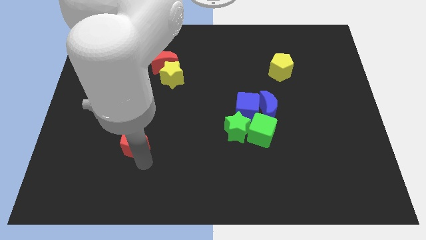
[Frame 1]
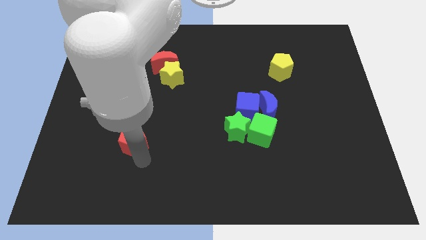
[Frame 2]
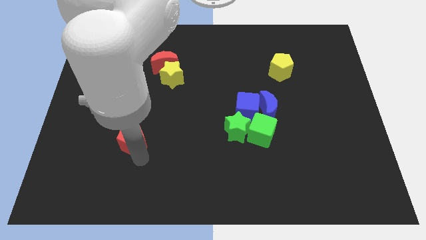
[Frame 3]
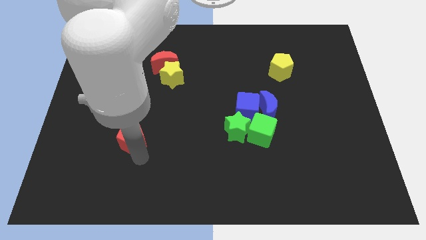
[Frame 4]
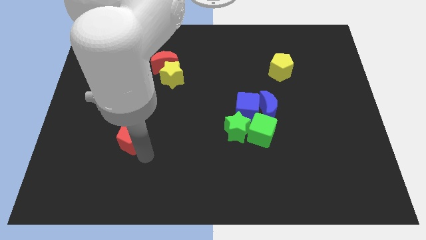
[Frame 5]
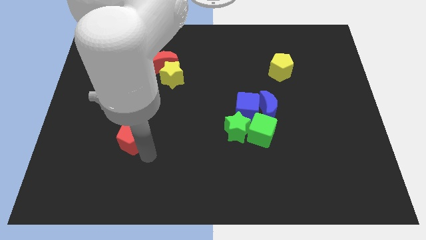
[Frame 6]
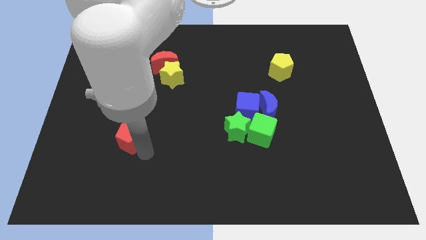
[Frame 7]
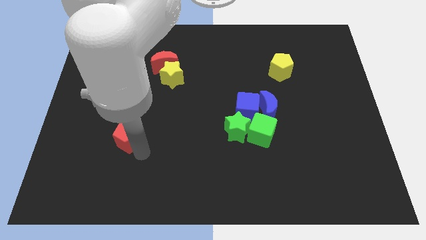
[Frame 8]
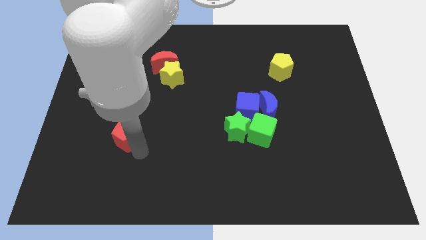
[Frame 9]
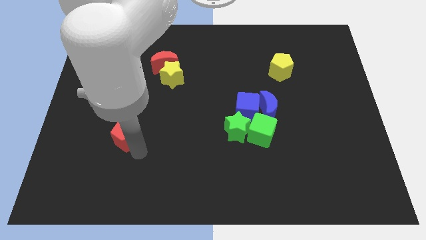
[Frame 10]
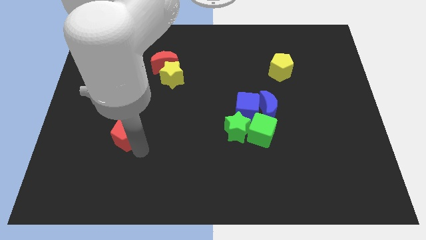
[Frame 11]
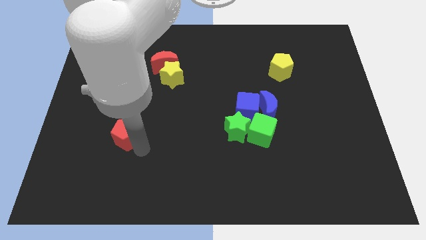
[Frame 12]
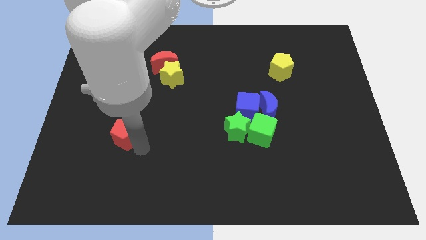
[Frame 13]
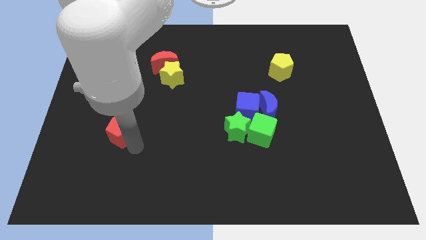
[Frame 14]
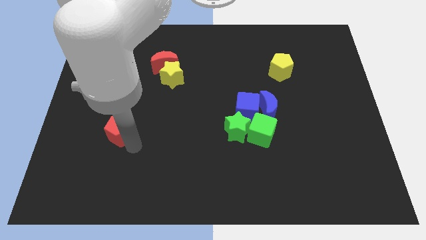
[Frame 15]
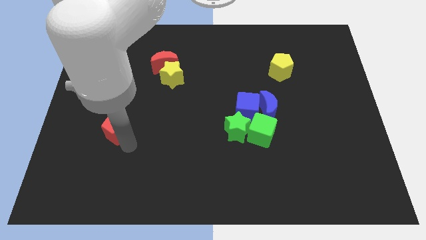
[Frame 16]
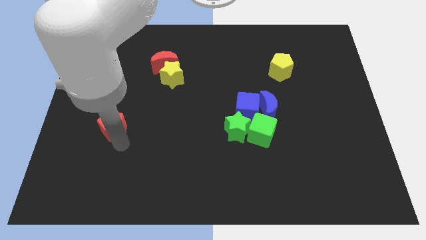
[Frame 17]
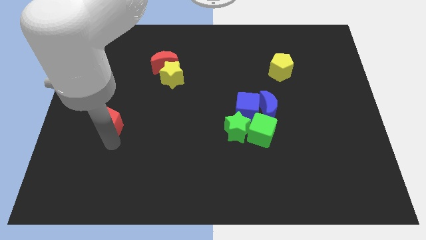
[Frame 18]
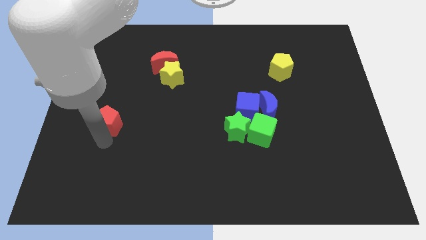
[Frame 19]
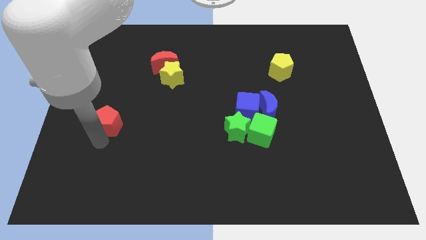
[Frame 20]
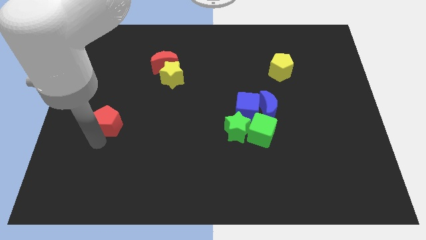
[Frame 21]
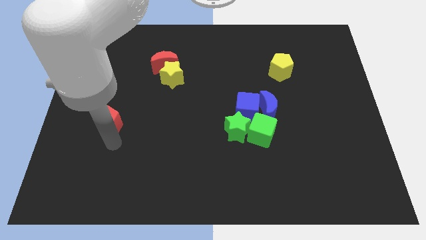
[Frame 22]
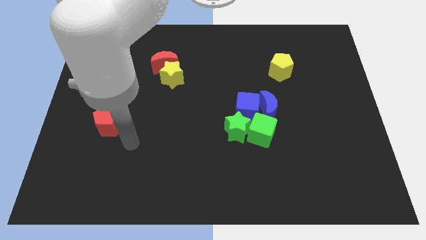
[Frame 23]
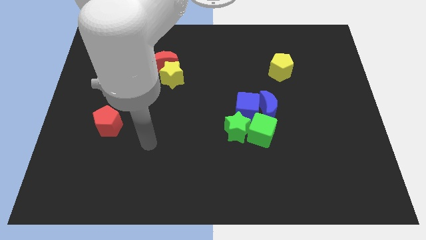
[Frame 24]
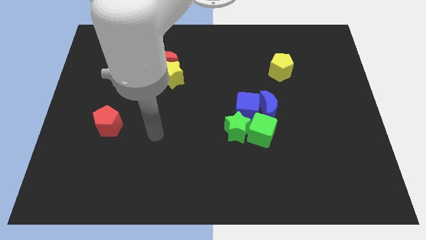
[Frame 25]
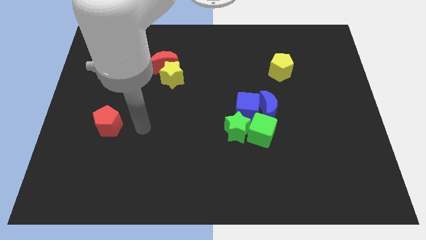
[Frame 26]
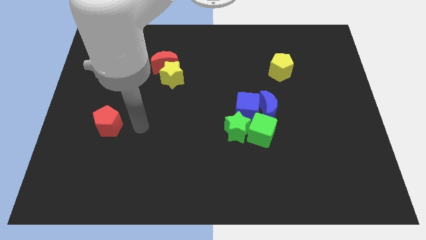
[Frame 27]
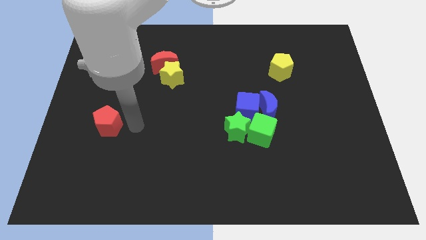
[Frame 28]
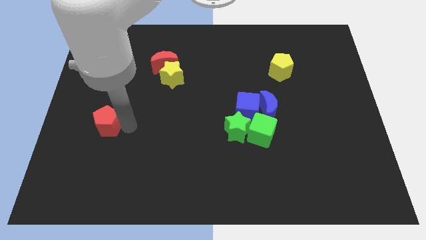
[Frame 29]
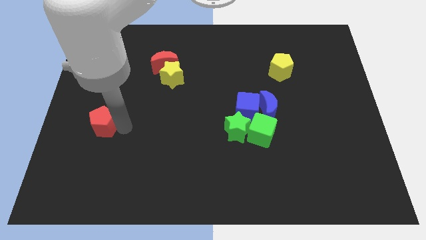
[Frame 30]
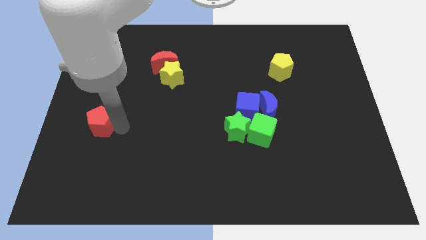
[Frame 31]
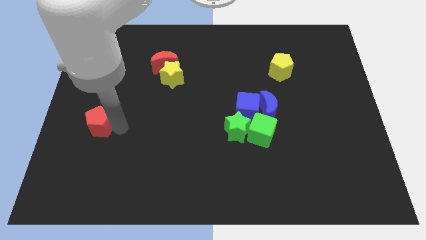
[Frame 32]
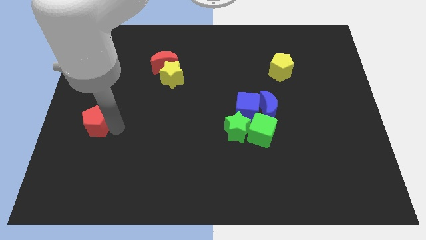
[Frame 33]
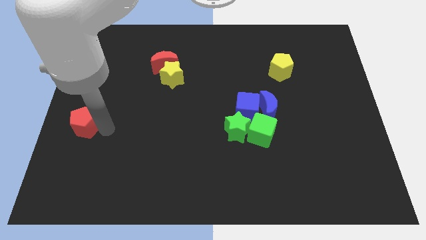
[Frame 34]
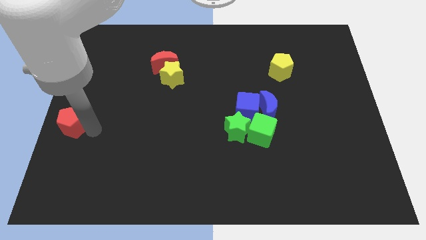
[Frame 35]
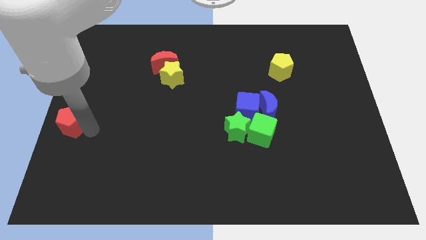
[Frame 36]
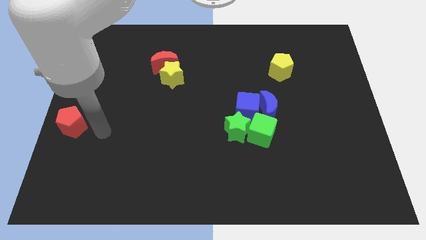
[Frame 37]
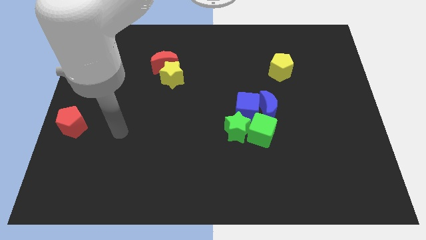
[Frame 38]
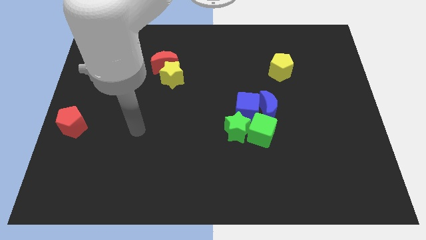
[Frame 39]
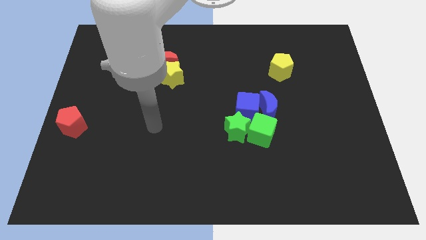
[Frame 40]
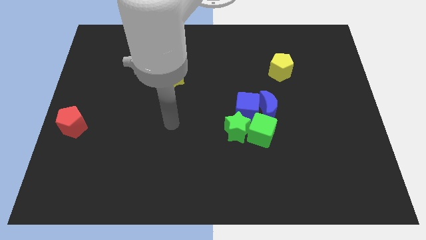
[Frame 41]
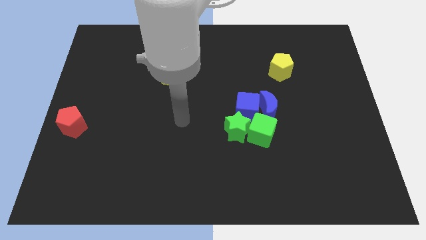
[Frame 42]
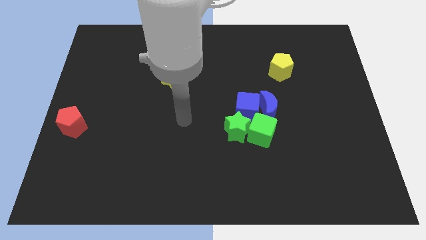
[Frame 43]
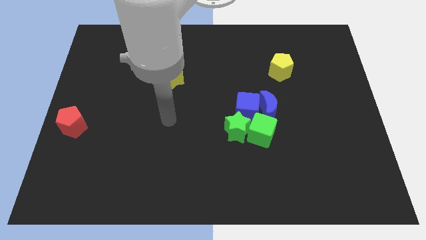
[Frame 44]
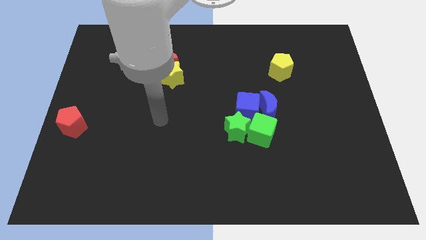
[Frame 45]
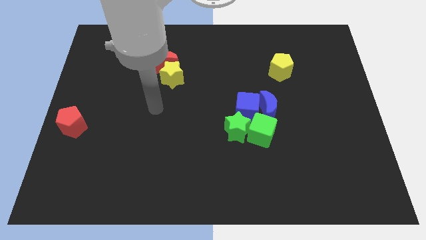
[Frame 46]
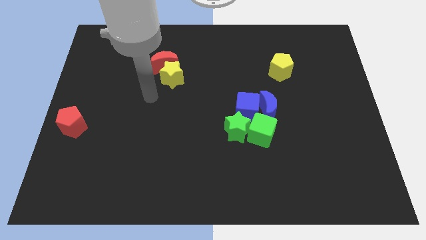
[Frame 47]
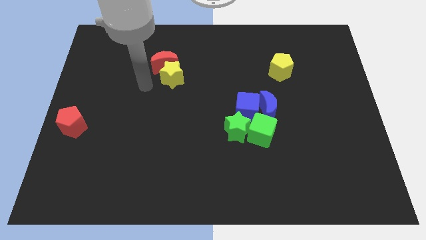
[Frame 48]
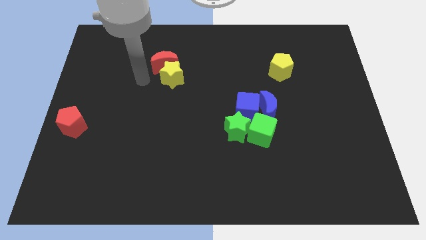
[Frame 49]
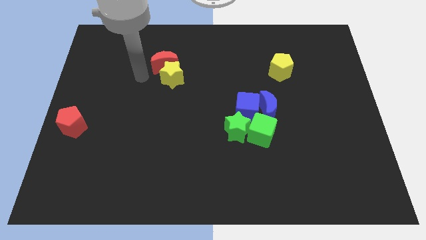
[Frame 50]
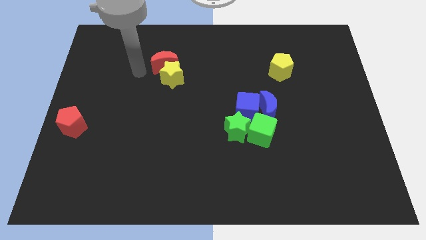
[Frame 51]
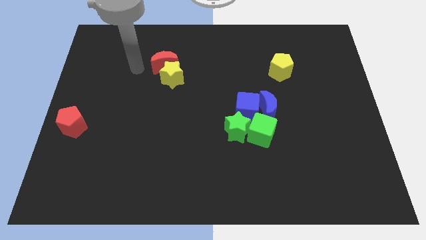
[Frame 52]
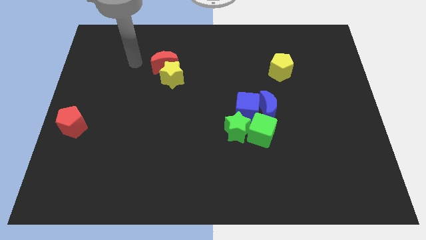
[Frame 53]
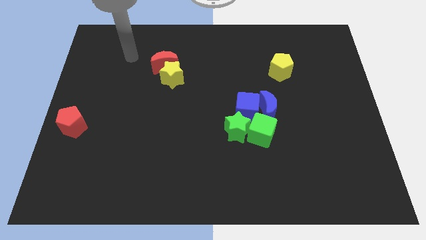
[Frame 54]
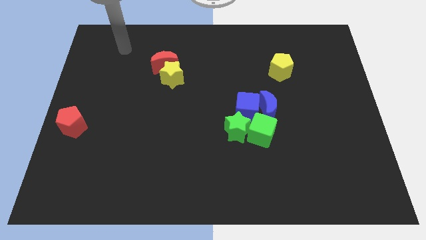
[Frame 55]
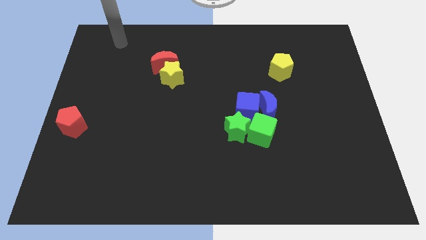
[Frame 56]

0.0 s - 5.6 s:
move the red pentagon towards left side

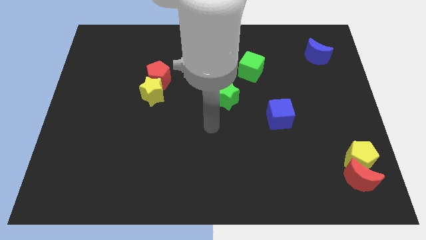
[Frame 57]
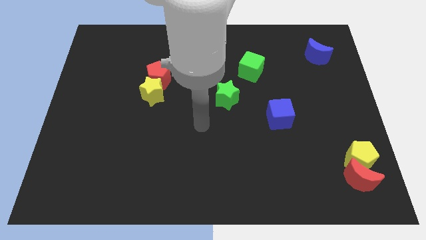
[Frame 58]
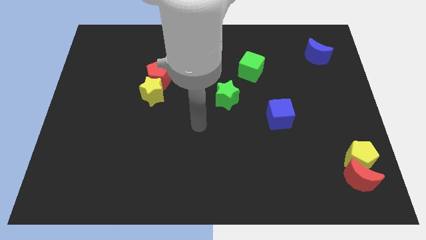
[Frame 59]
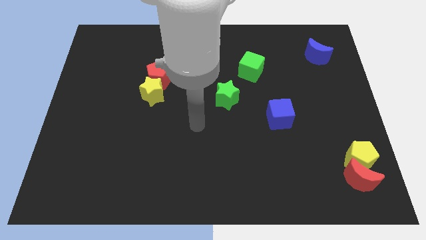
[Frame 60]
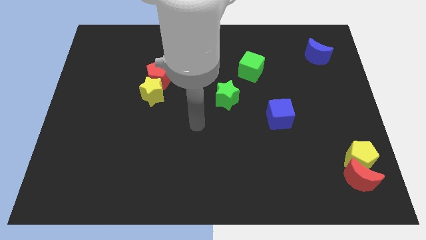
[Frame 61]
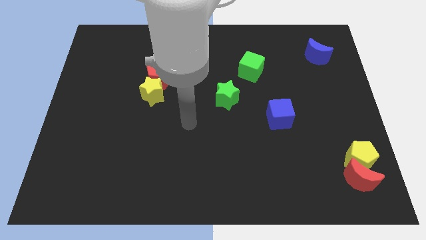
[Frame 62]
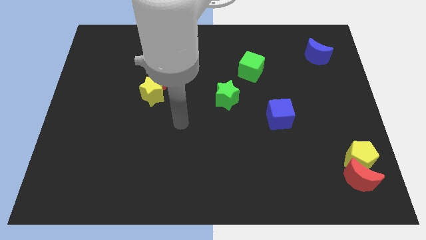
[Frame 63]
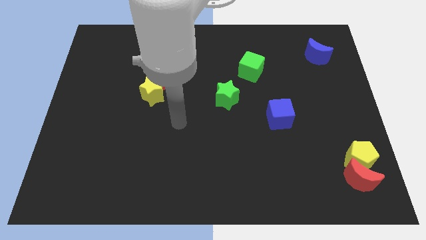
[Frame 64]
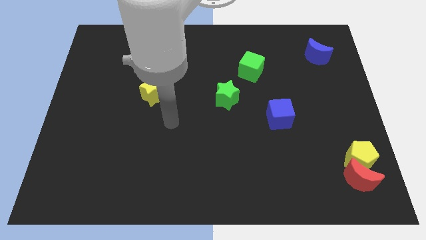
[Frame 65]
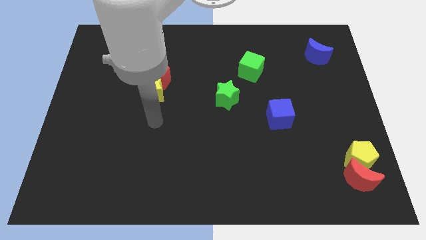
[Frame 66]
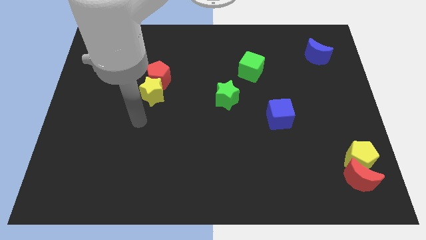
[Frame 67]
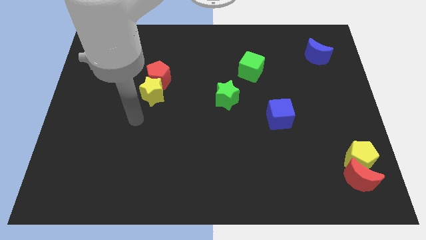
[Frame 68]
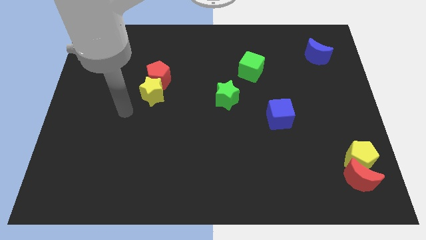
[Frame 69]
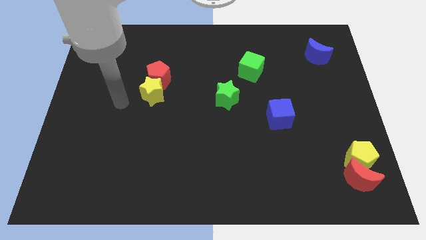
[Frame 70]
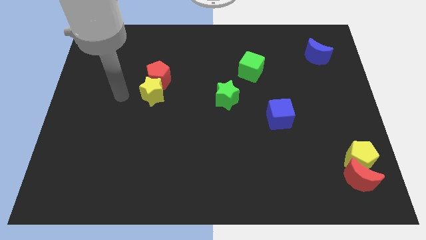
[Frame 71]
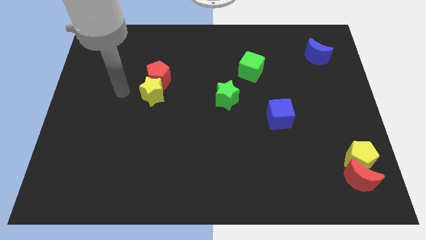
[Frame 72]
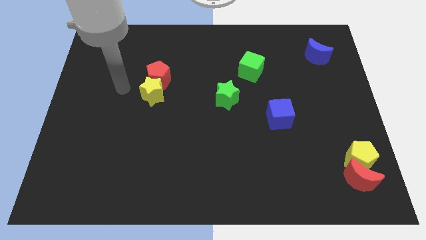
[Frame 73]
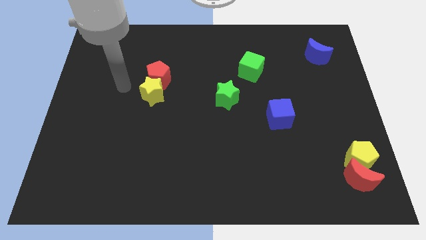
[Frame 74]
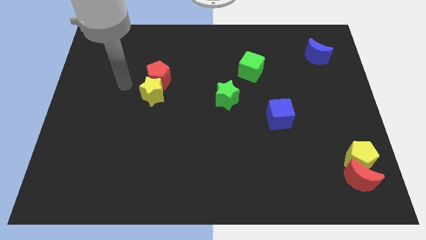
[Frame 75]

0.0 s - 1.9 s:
move your arm towards the yellow star

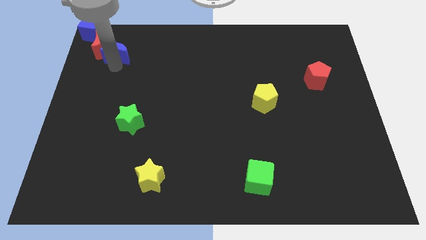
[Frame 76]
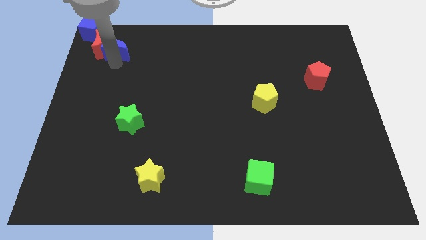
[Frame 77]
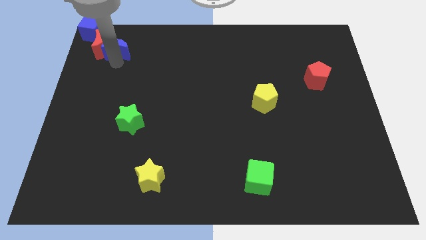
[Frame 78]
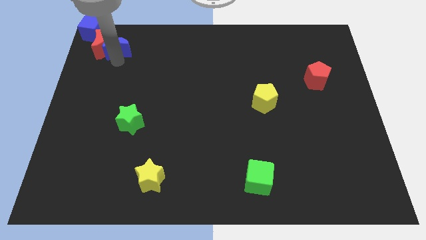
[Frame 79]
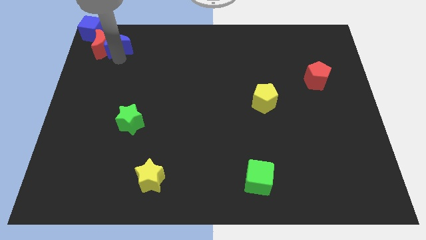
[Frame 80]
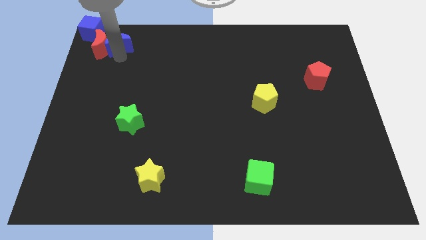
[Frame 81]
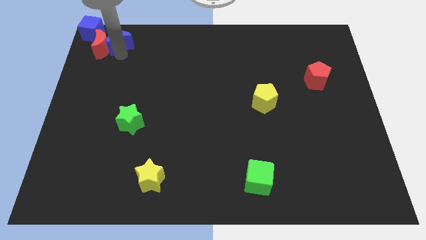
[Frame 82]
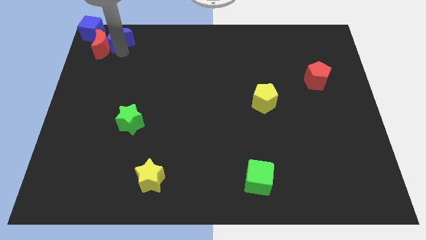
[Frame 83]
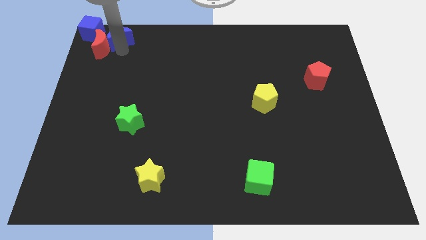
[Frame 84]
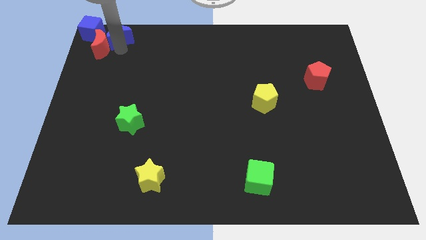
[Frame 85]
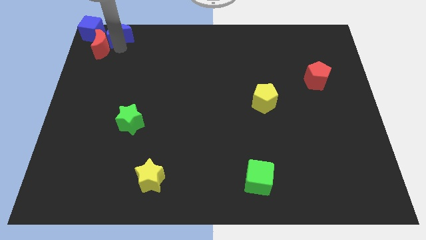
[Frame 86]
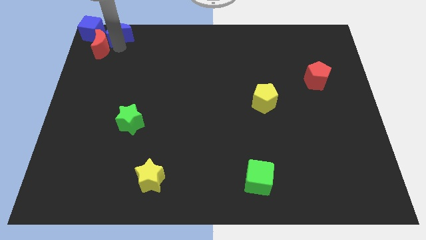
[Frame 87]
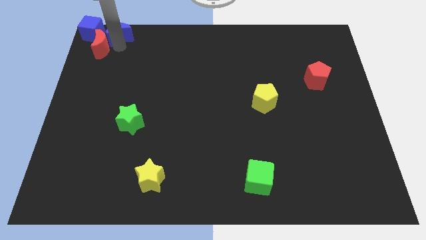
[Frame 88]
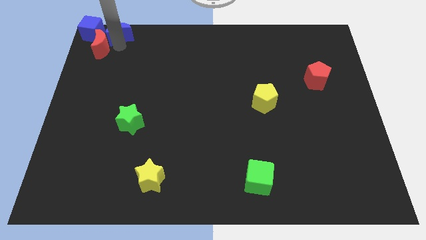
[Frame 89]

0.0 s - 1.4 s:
push the blue moon block to the top right of the board
